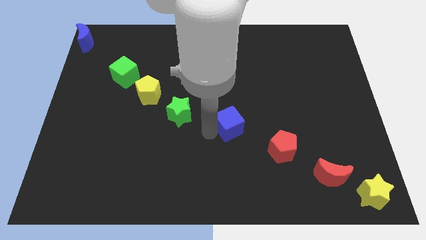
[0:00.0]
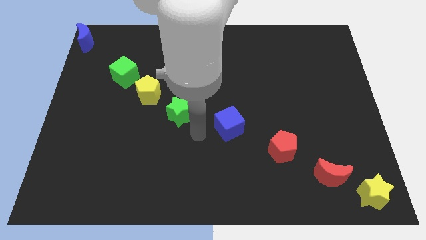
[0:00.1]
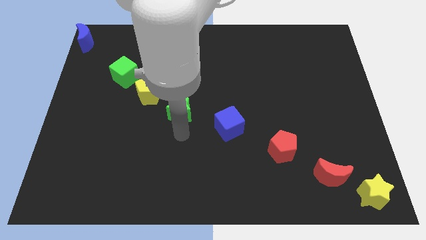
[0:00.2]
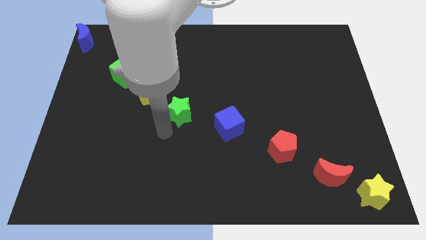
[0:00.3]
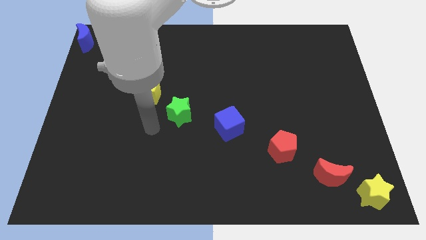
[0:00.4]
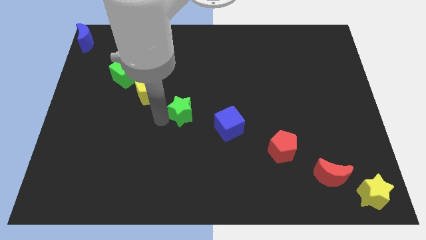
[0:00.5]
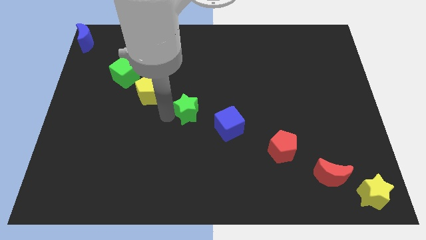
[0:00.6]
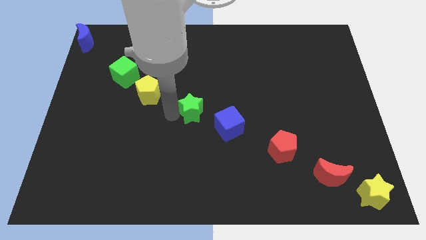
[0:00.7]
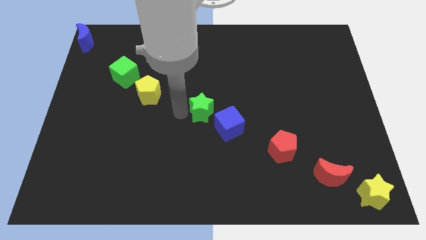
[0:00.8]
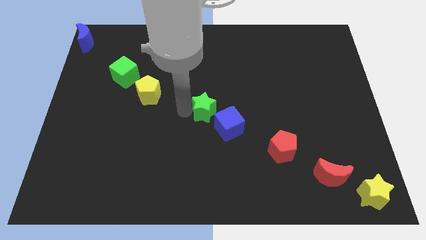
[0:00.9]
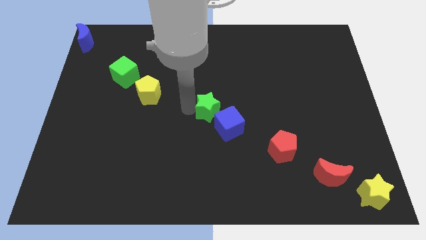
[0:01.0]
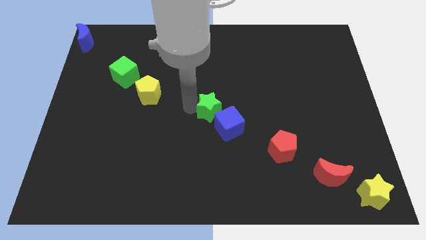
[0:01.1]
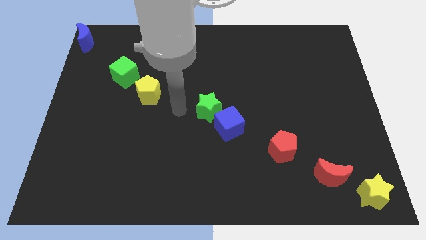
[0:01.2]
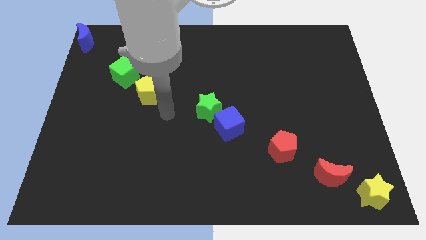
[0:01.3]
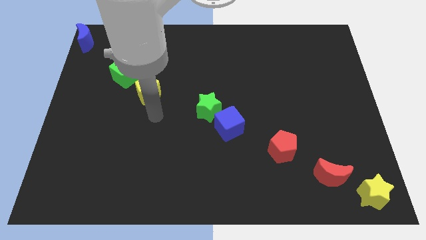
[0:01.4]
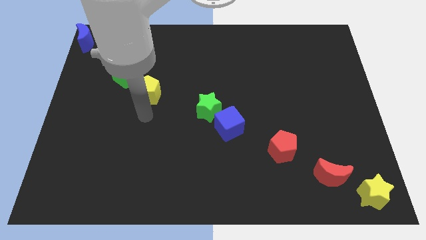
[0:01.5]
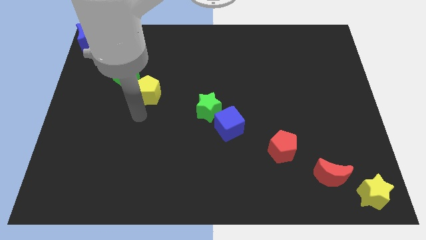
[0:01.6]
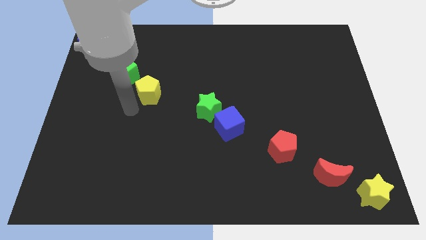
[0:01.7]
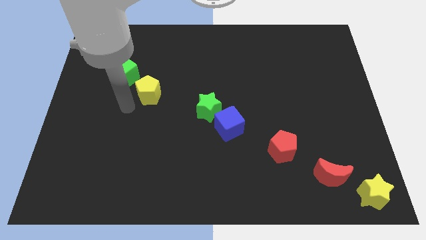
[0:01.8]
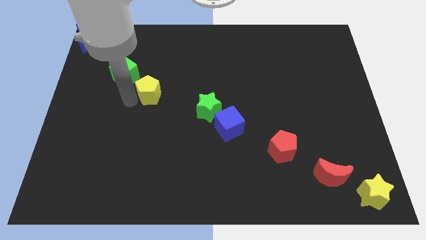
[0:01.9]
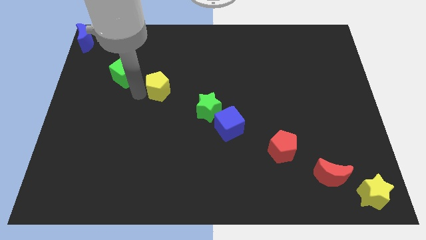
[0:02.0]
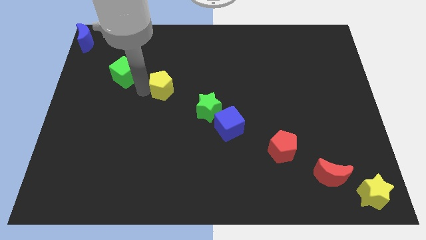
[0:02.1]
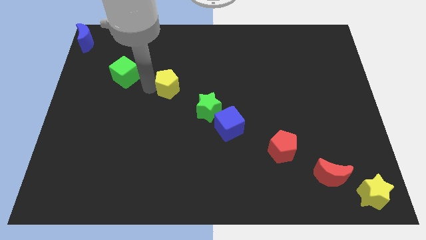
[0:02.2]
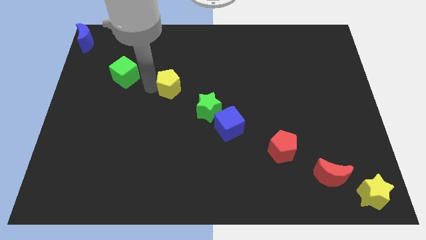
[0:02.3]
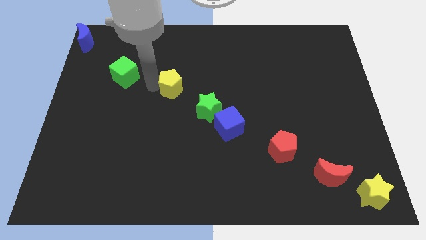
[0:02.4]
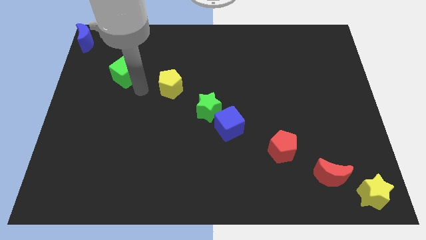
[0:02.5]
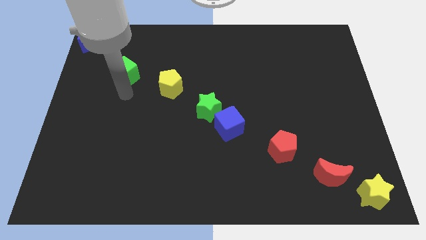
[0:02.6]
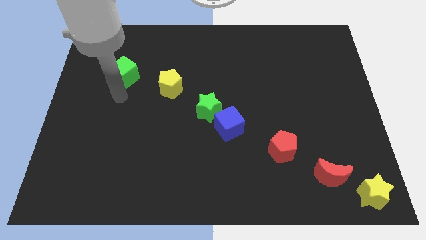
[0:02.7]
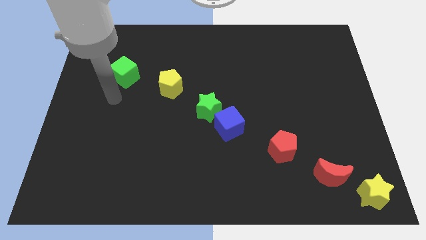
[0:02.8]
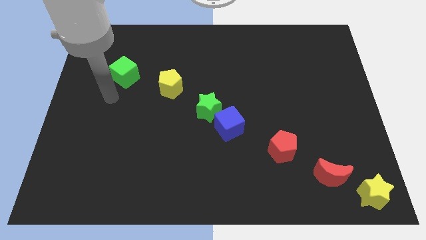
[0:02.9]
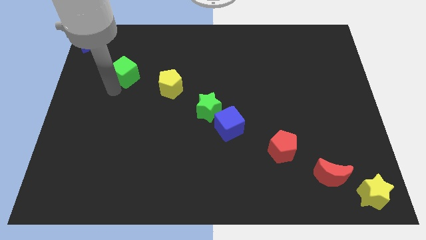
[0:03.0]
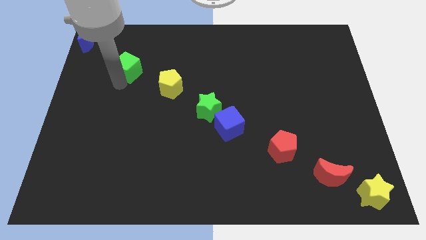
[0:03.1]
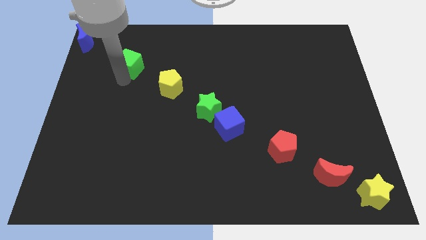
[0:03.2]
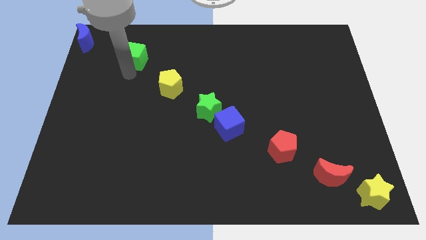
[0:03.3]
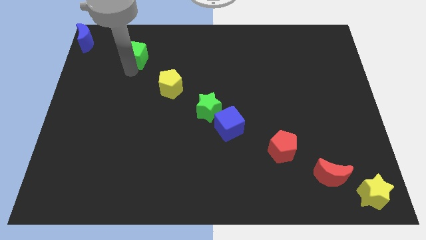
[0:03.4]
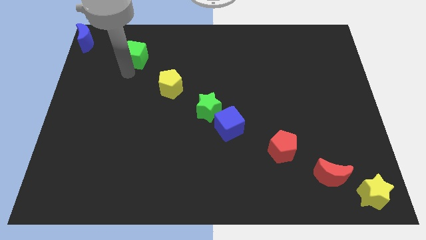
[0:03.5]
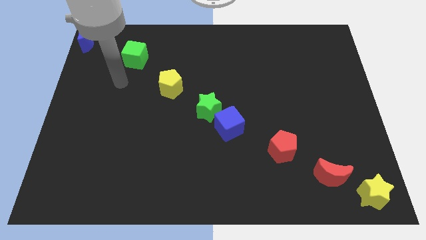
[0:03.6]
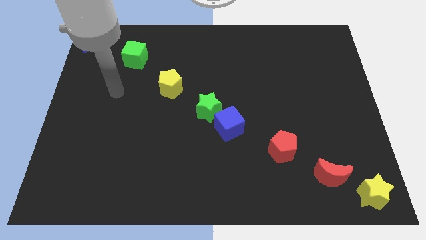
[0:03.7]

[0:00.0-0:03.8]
arrange the blocks diagonally at the center of the board

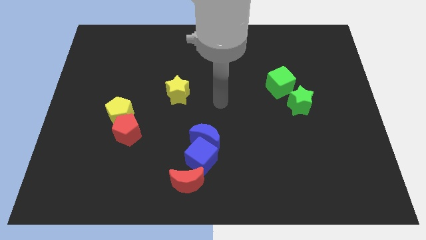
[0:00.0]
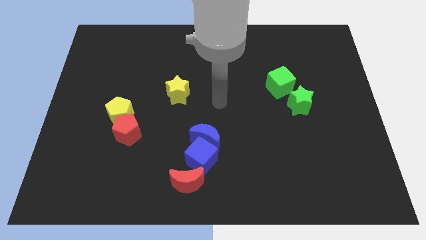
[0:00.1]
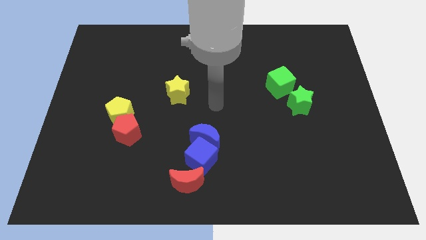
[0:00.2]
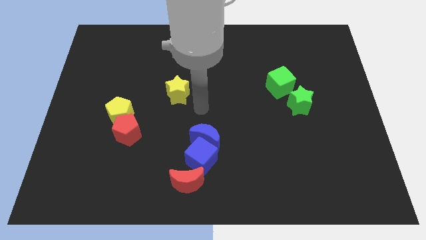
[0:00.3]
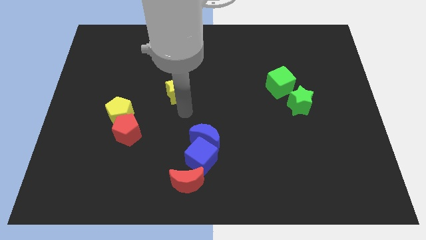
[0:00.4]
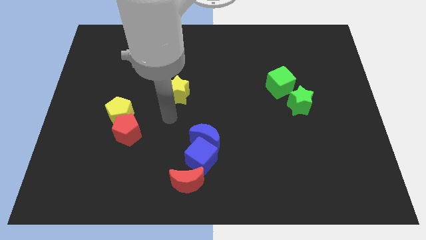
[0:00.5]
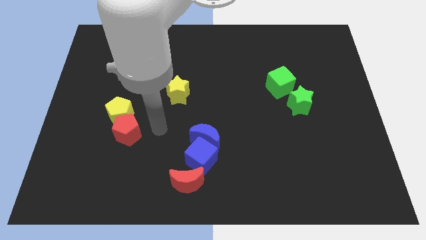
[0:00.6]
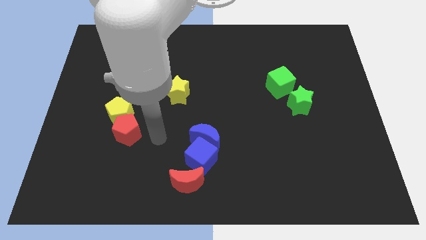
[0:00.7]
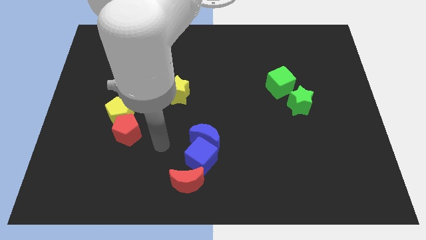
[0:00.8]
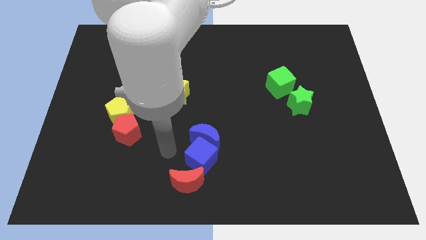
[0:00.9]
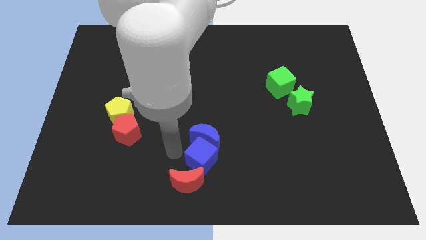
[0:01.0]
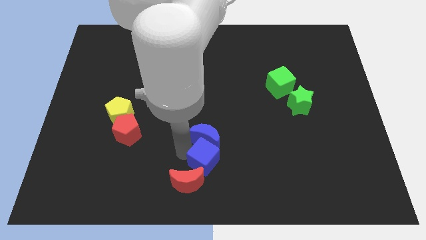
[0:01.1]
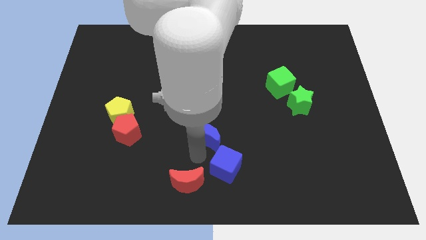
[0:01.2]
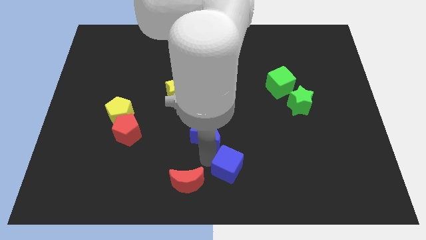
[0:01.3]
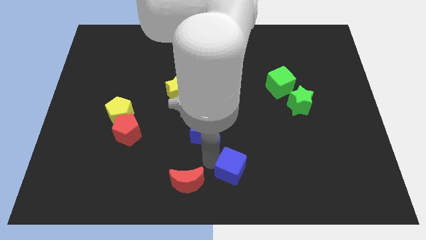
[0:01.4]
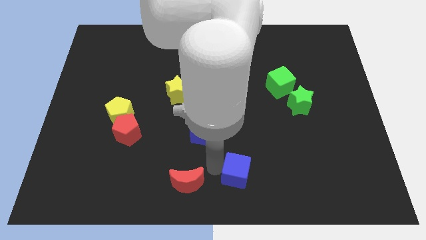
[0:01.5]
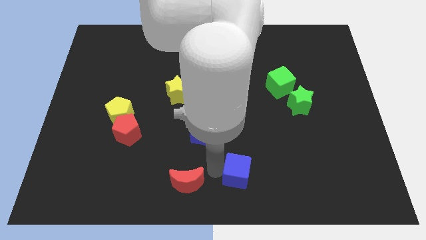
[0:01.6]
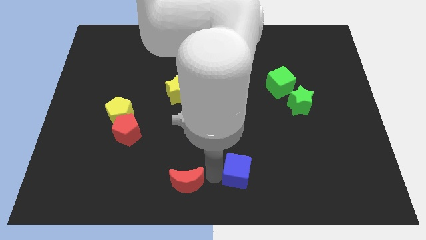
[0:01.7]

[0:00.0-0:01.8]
separate the blue cube from blue crescent

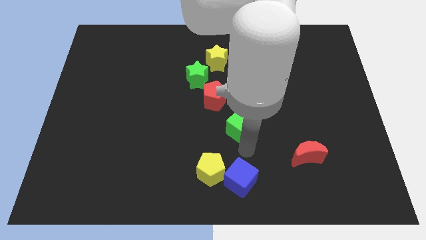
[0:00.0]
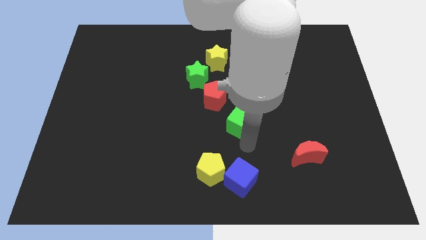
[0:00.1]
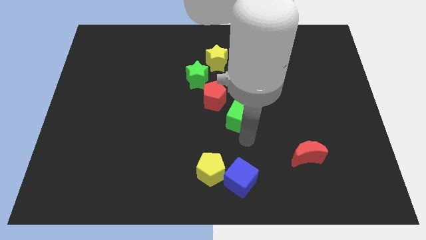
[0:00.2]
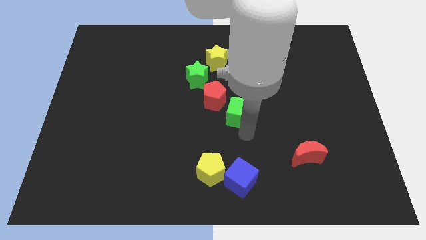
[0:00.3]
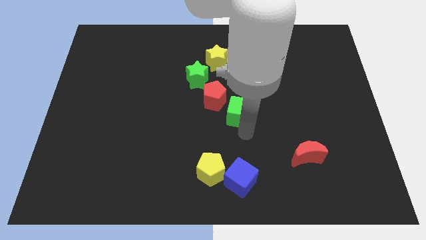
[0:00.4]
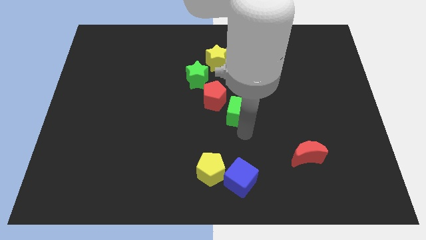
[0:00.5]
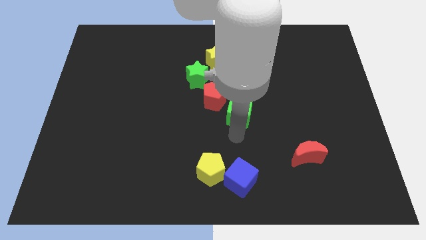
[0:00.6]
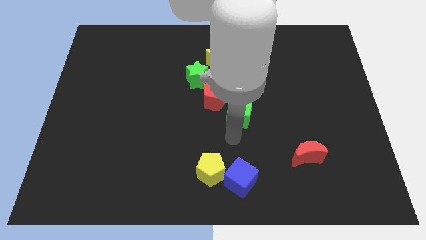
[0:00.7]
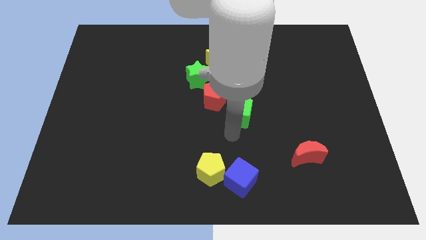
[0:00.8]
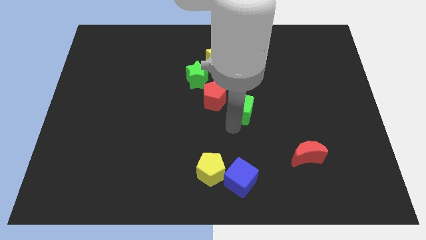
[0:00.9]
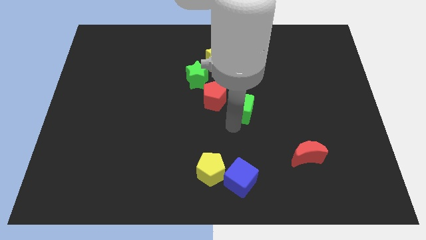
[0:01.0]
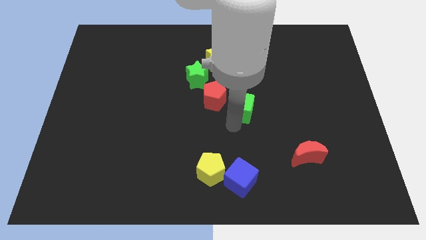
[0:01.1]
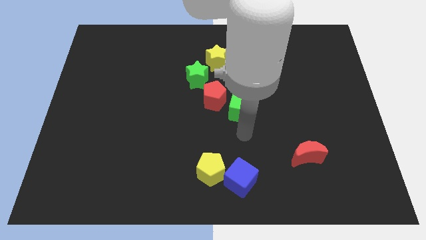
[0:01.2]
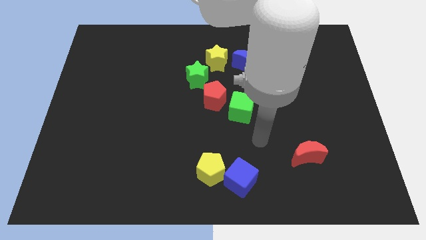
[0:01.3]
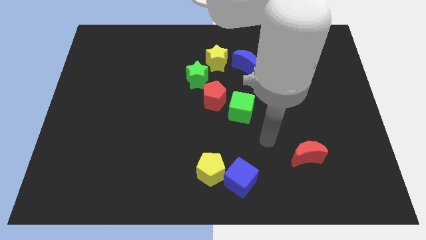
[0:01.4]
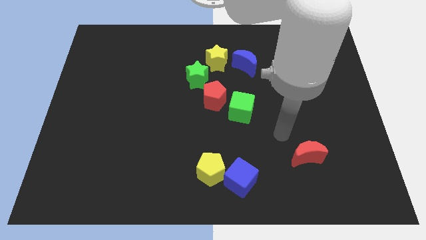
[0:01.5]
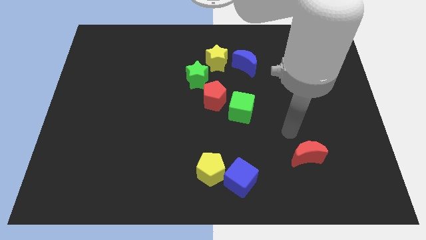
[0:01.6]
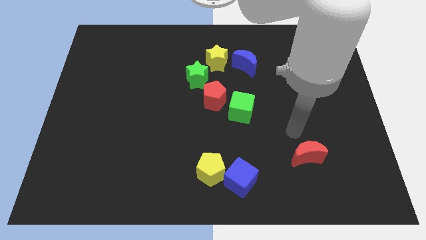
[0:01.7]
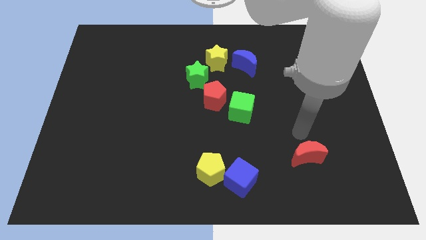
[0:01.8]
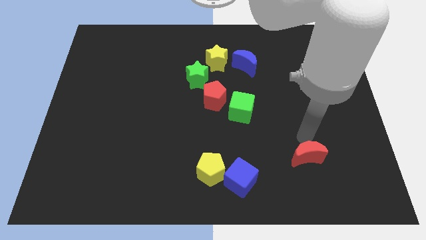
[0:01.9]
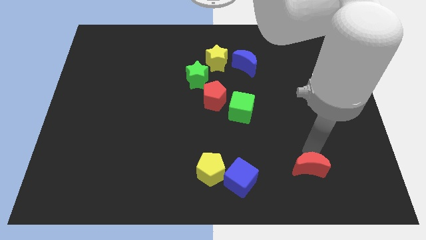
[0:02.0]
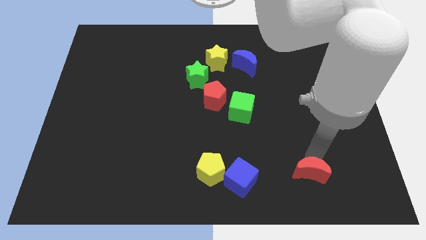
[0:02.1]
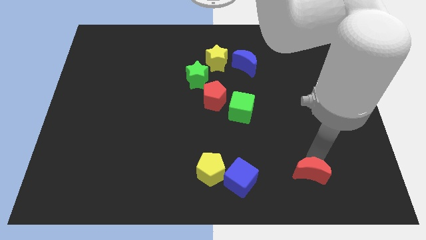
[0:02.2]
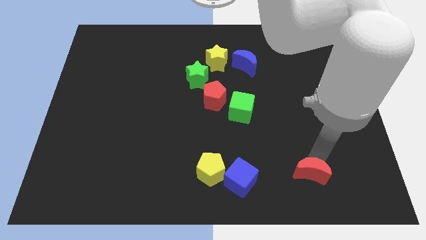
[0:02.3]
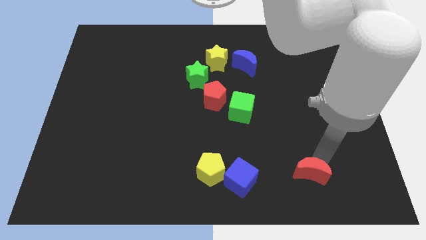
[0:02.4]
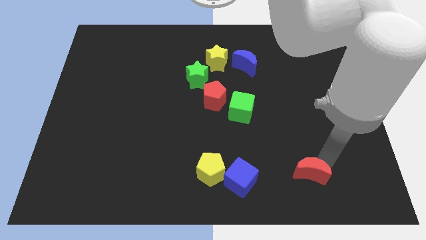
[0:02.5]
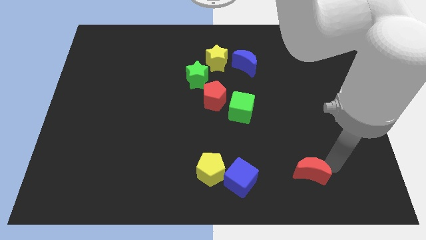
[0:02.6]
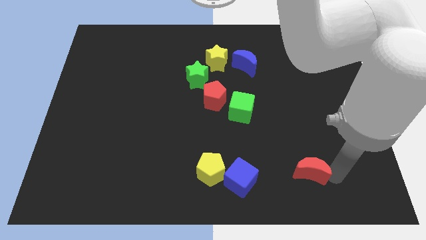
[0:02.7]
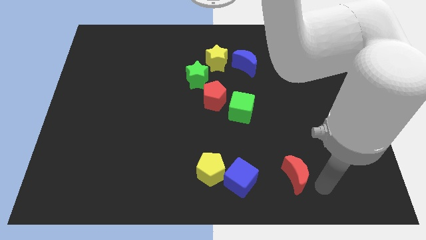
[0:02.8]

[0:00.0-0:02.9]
place red moon parallel to blue cube

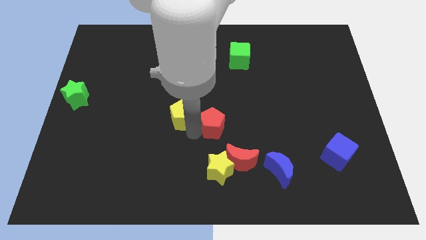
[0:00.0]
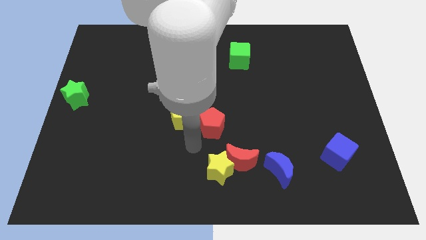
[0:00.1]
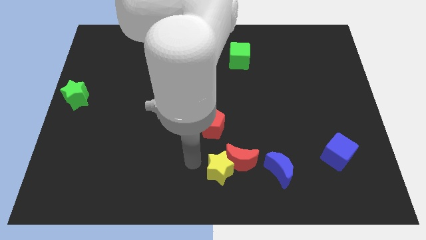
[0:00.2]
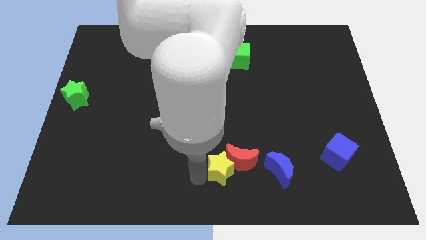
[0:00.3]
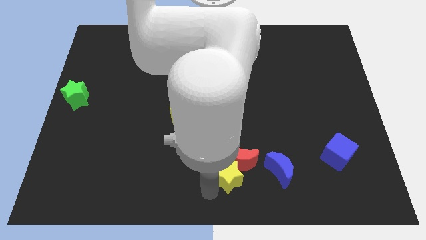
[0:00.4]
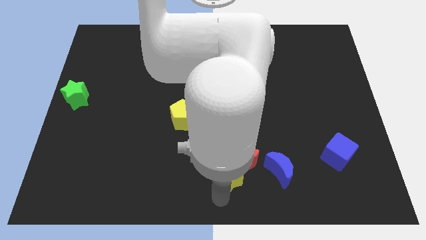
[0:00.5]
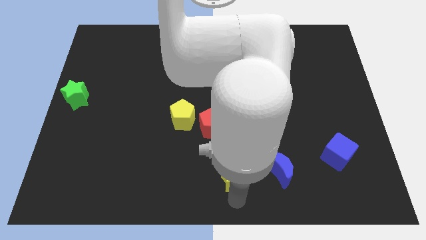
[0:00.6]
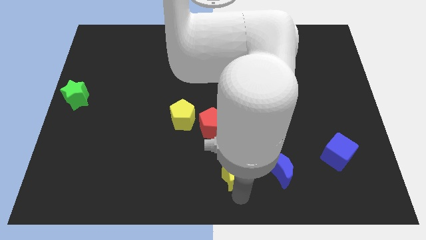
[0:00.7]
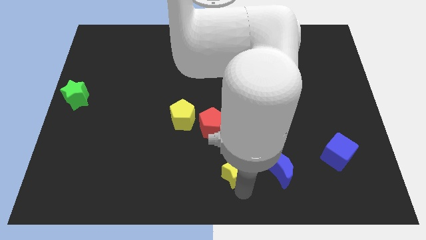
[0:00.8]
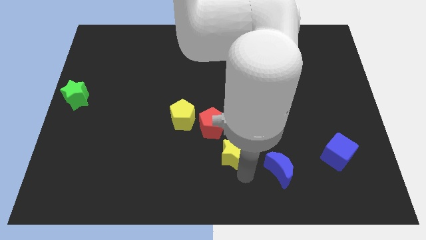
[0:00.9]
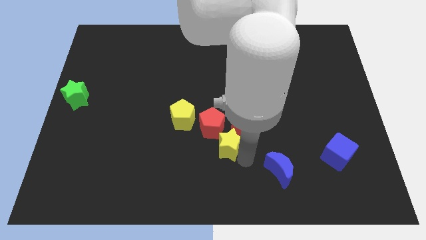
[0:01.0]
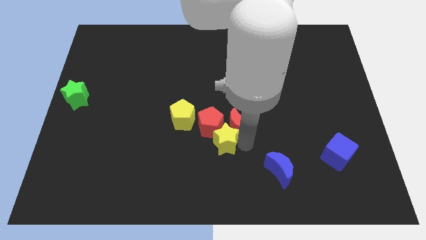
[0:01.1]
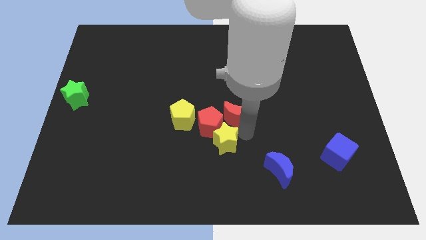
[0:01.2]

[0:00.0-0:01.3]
slide the yellow star and red crescent slightly to the center of the board
